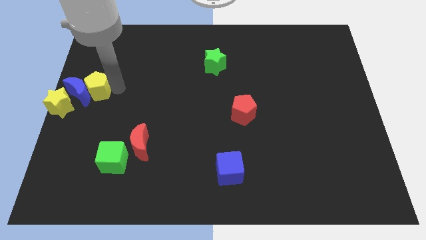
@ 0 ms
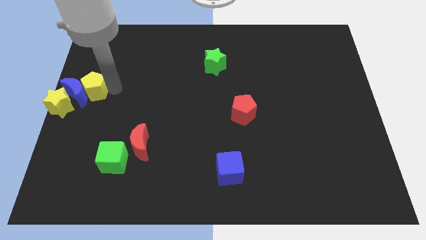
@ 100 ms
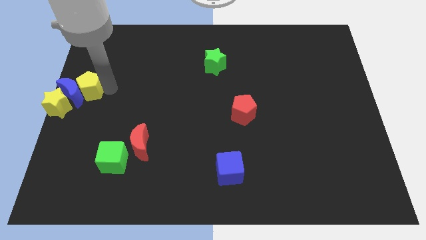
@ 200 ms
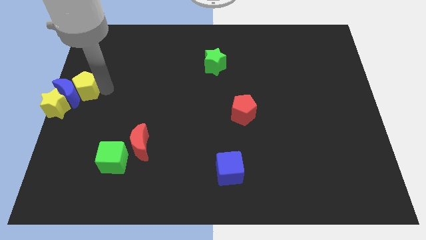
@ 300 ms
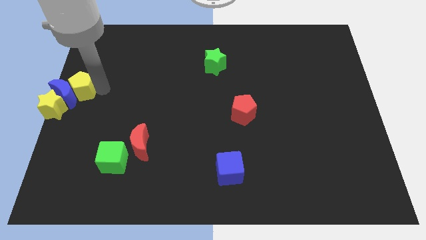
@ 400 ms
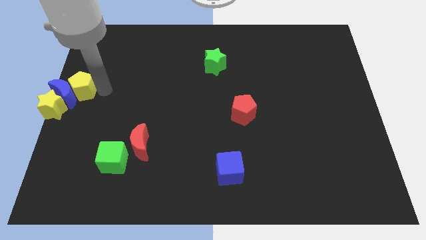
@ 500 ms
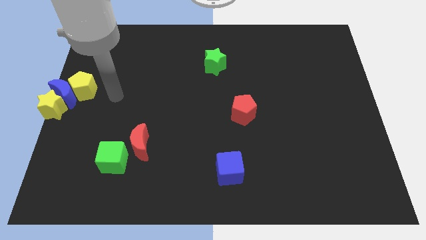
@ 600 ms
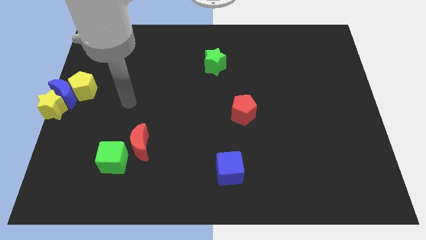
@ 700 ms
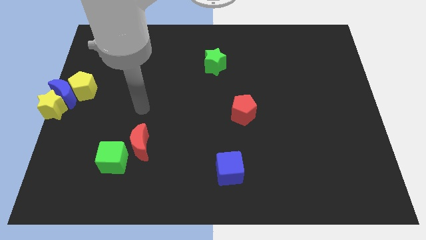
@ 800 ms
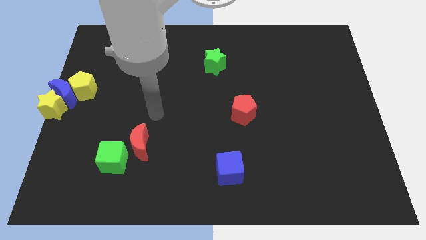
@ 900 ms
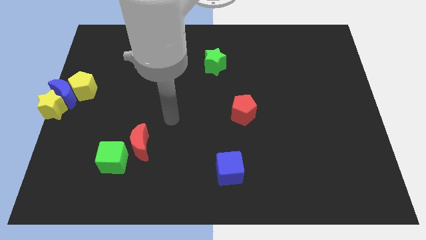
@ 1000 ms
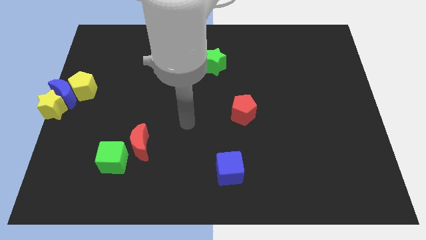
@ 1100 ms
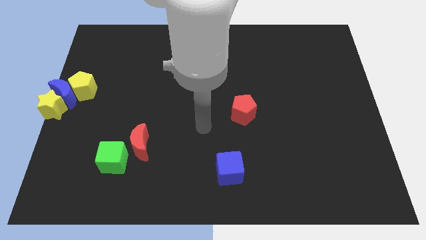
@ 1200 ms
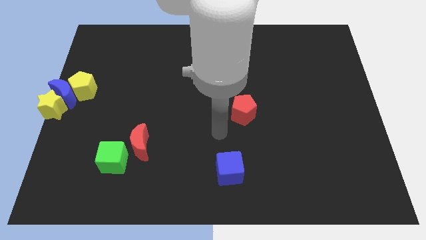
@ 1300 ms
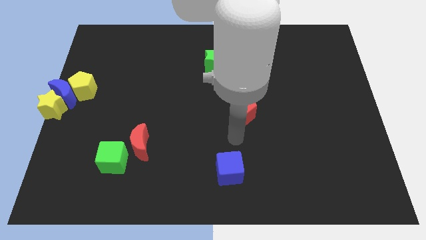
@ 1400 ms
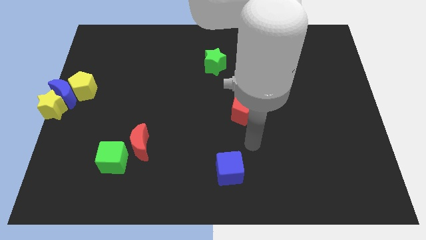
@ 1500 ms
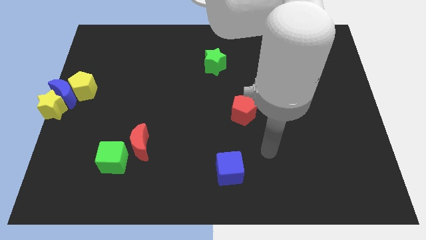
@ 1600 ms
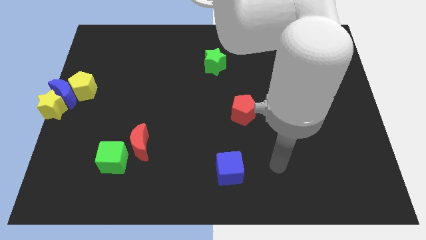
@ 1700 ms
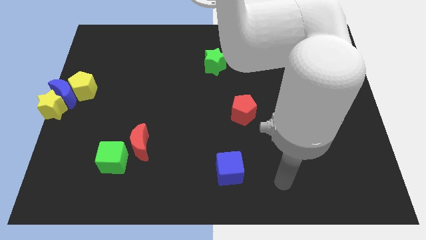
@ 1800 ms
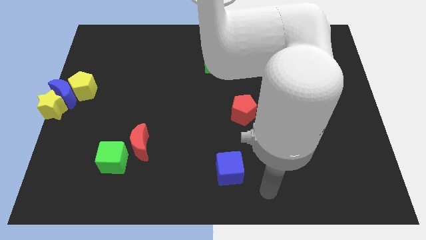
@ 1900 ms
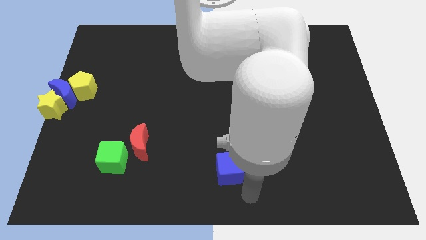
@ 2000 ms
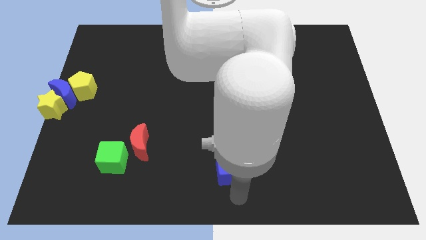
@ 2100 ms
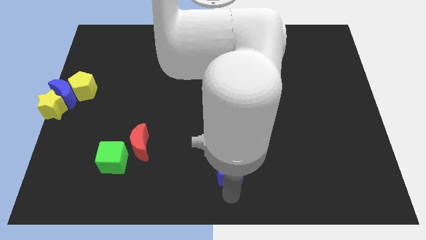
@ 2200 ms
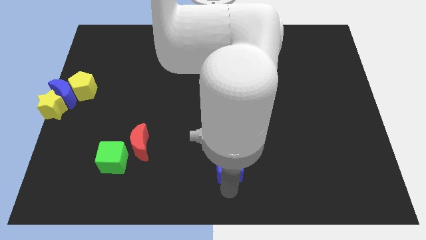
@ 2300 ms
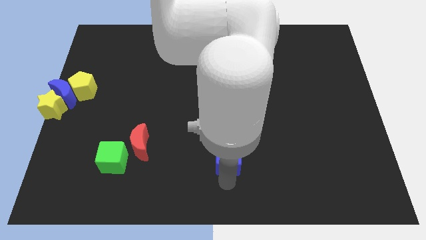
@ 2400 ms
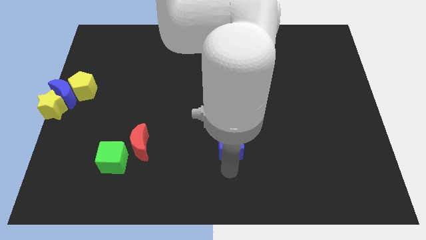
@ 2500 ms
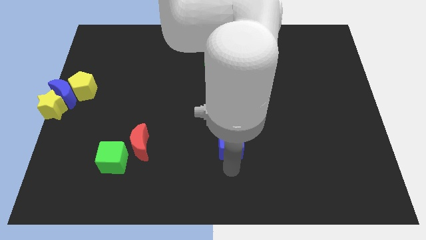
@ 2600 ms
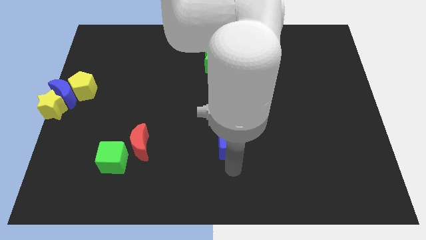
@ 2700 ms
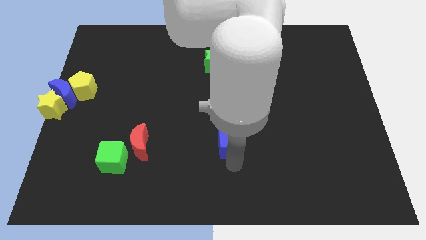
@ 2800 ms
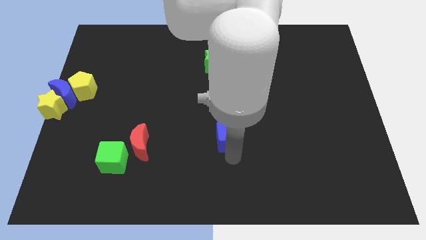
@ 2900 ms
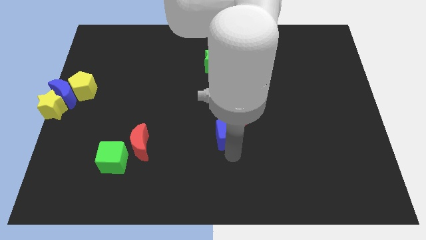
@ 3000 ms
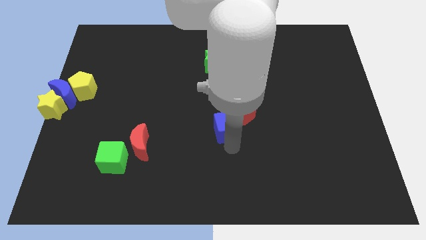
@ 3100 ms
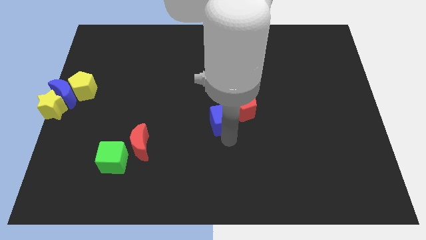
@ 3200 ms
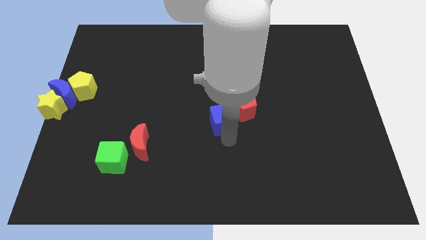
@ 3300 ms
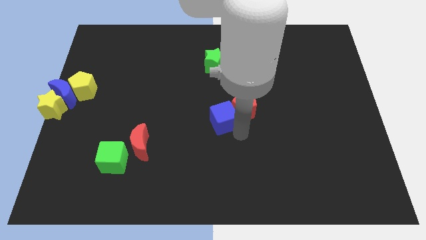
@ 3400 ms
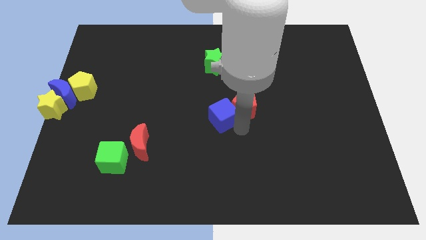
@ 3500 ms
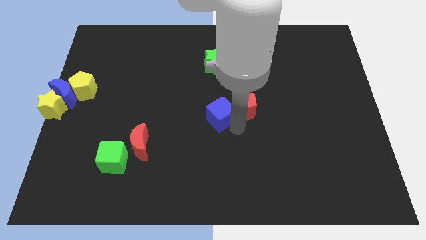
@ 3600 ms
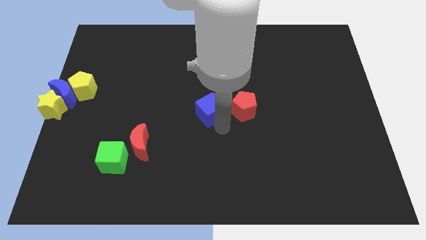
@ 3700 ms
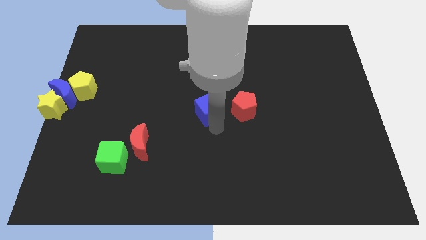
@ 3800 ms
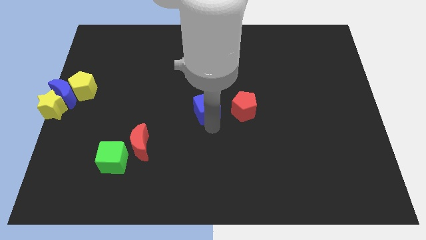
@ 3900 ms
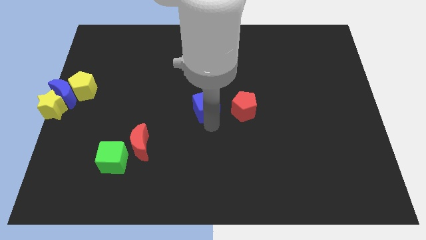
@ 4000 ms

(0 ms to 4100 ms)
place the blue cube left to the red pentagon

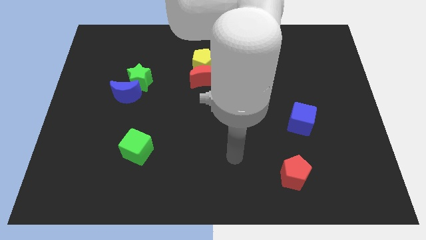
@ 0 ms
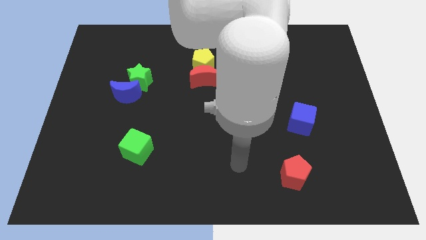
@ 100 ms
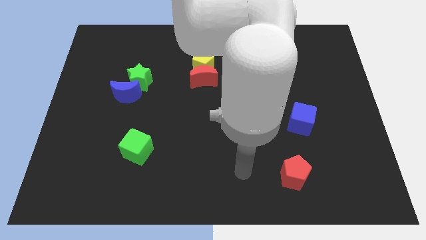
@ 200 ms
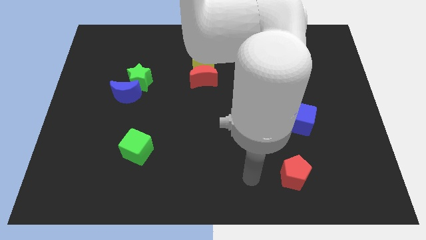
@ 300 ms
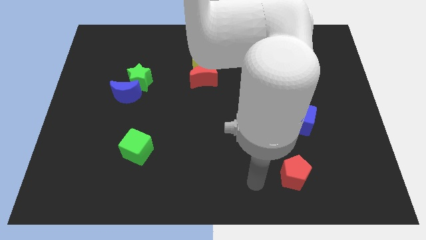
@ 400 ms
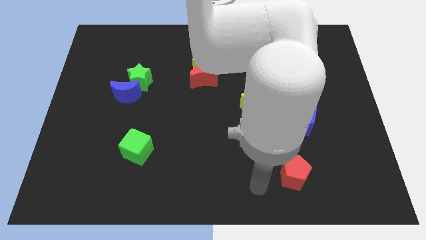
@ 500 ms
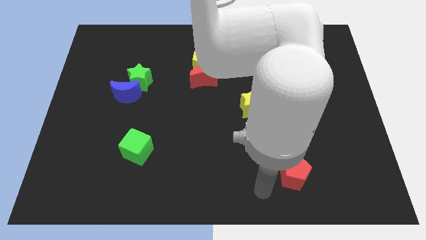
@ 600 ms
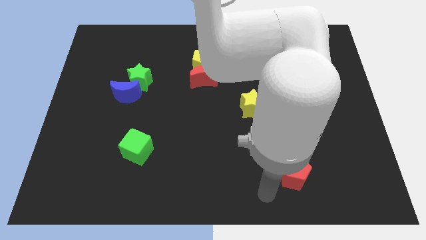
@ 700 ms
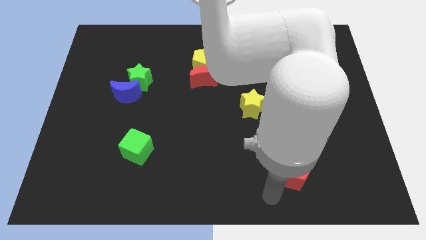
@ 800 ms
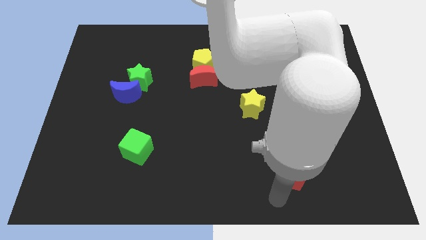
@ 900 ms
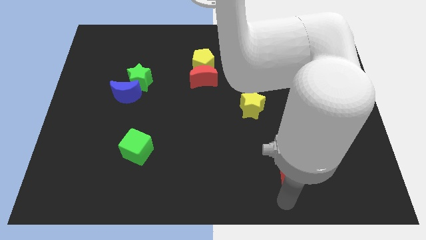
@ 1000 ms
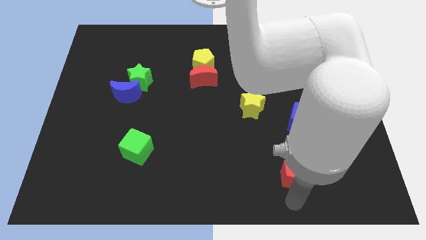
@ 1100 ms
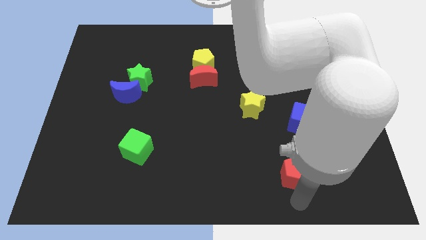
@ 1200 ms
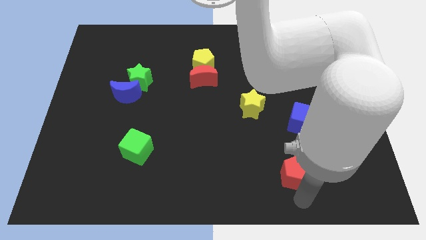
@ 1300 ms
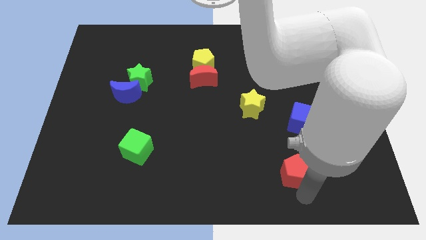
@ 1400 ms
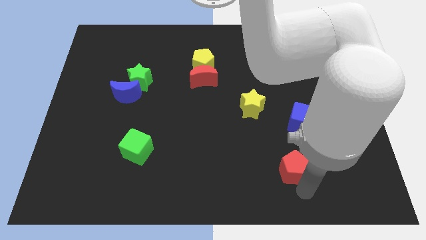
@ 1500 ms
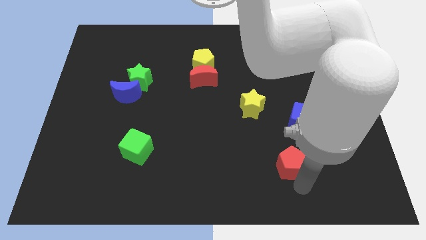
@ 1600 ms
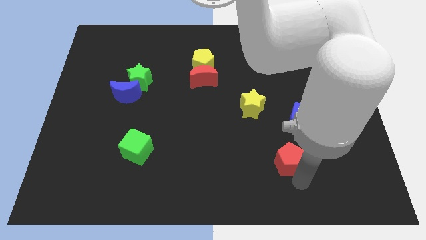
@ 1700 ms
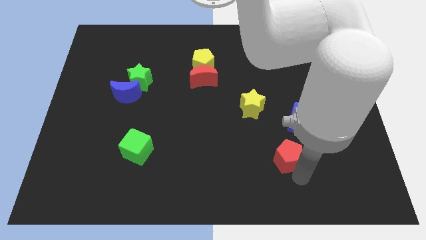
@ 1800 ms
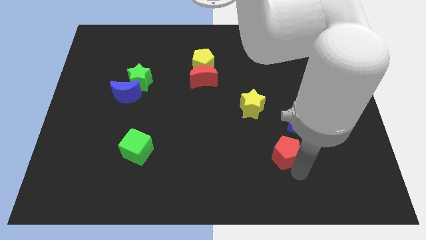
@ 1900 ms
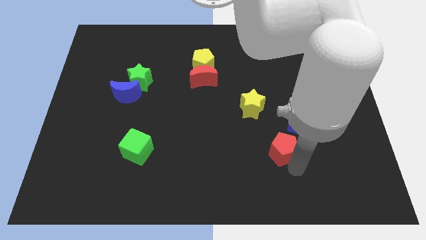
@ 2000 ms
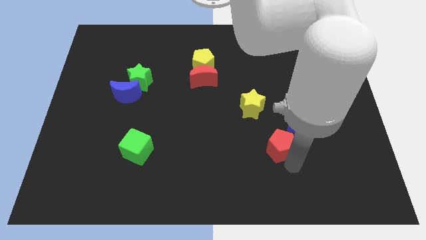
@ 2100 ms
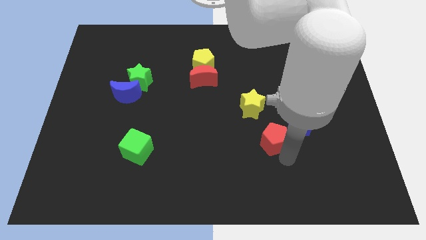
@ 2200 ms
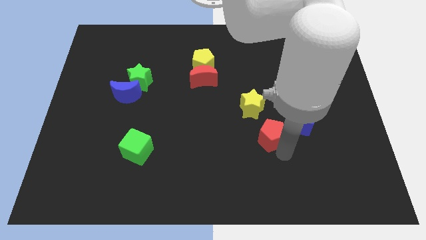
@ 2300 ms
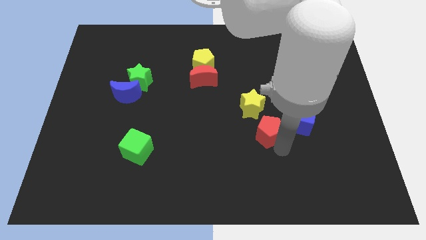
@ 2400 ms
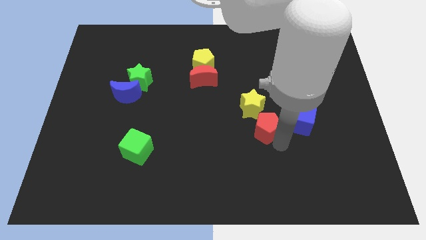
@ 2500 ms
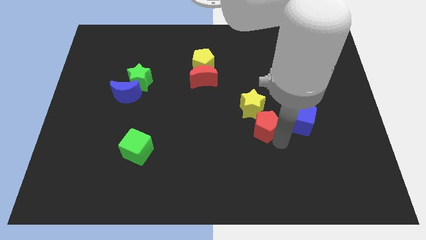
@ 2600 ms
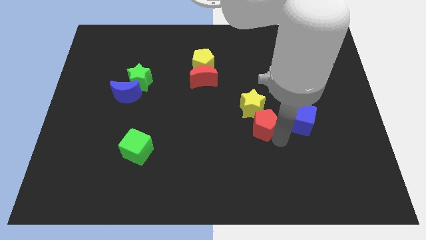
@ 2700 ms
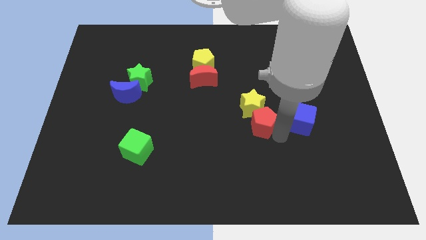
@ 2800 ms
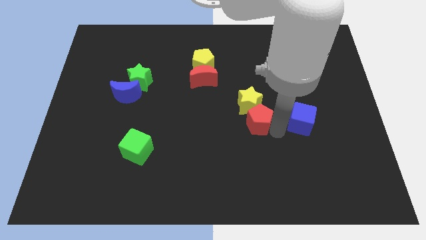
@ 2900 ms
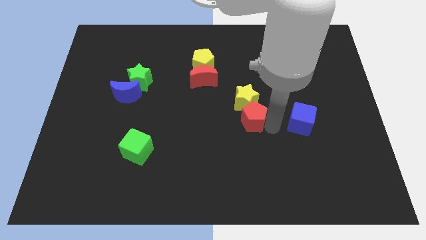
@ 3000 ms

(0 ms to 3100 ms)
add red pentagon into yellow star

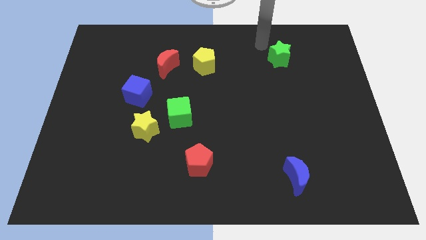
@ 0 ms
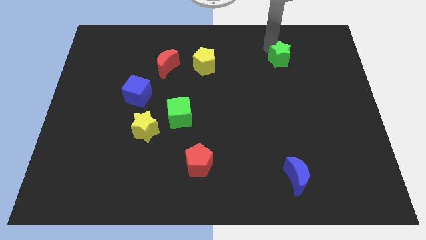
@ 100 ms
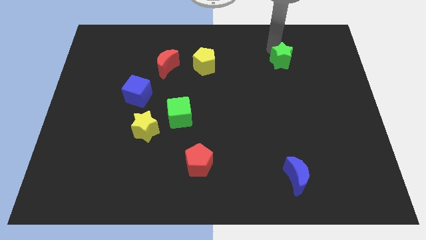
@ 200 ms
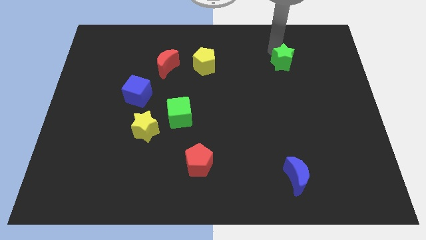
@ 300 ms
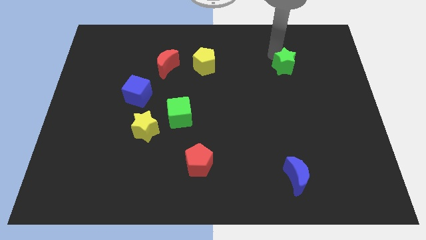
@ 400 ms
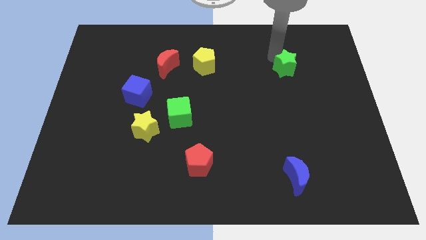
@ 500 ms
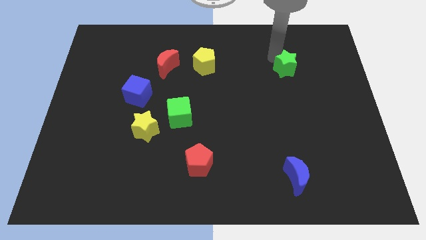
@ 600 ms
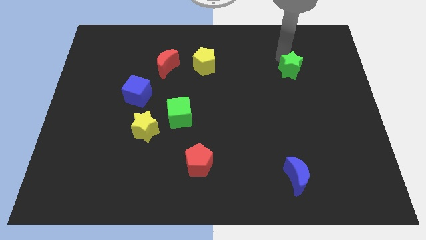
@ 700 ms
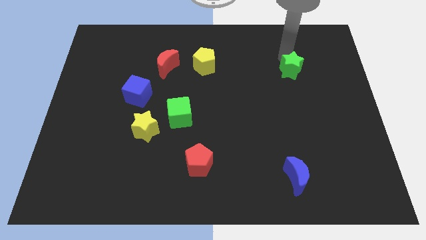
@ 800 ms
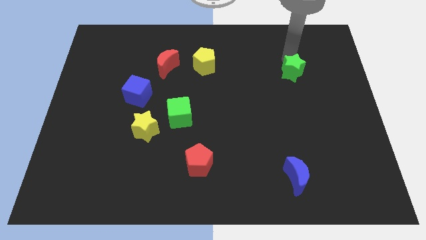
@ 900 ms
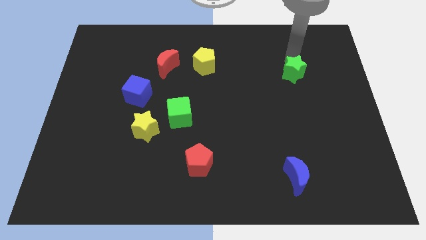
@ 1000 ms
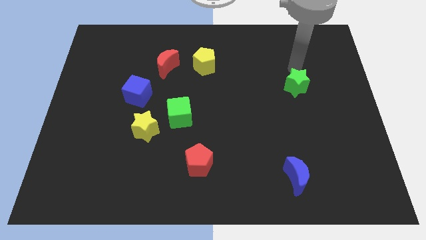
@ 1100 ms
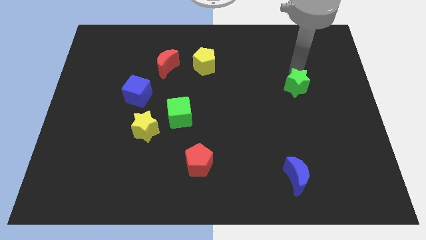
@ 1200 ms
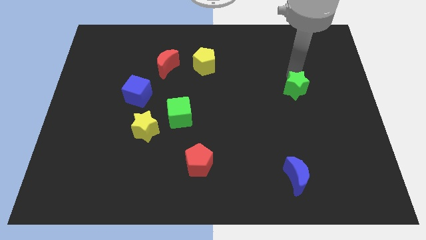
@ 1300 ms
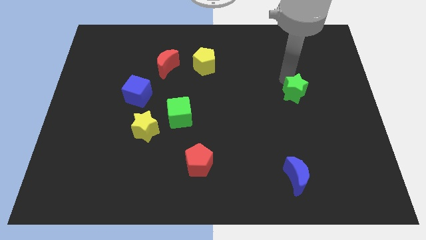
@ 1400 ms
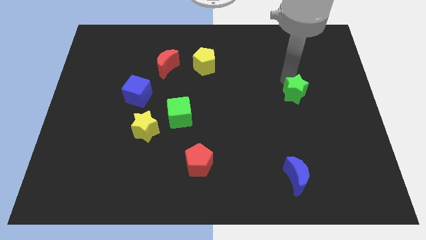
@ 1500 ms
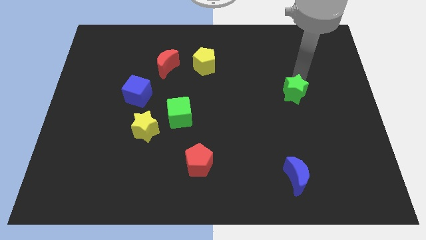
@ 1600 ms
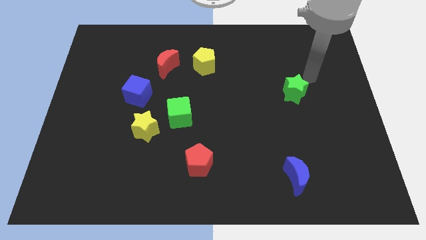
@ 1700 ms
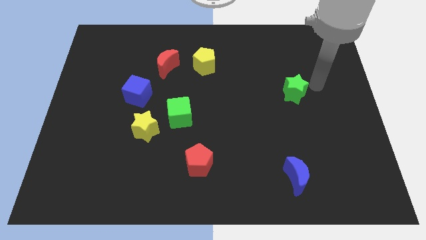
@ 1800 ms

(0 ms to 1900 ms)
push green star downwards and place above the blue crescent
